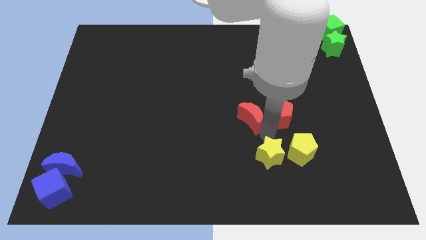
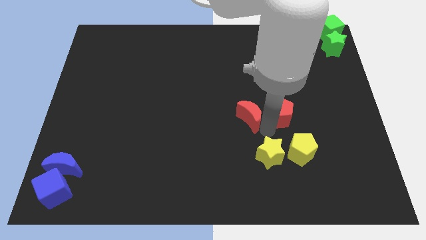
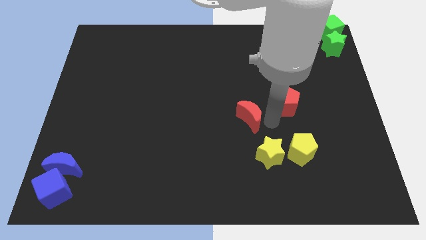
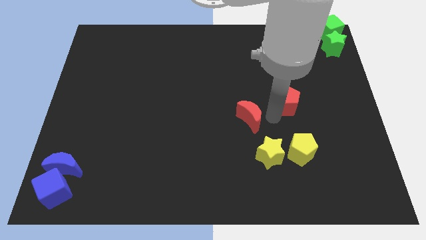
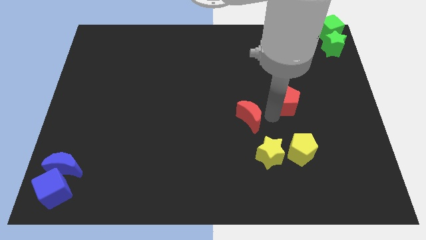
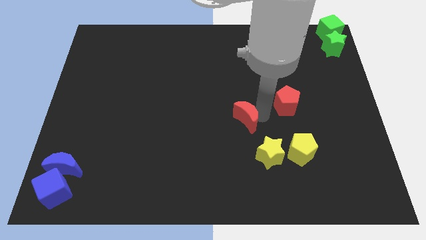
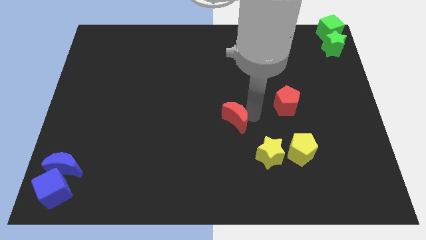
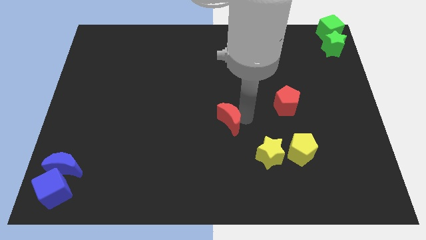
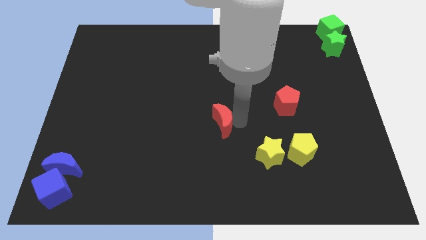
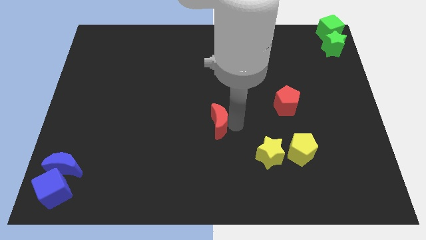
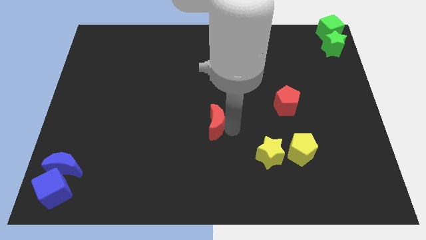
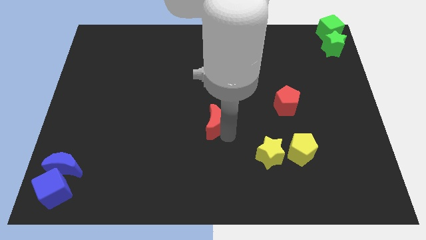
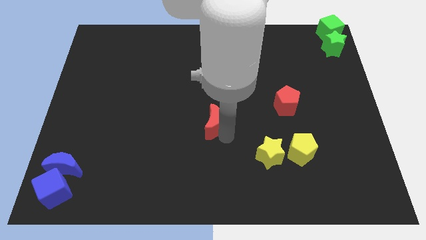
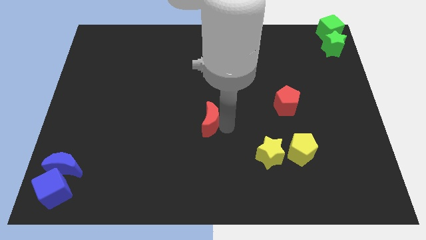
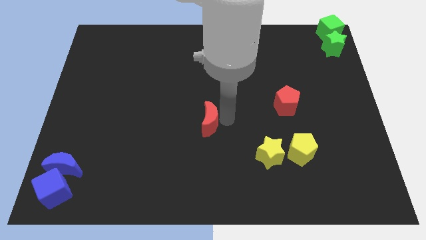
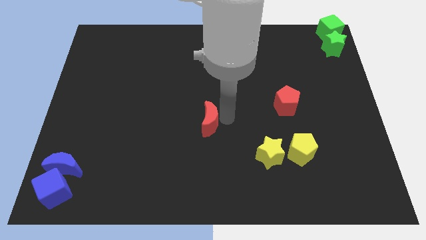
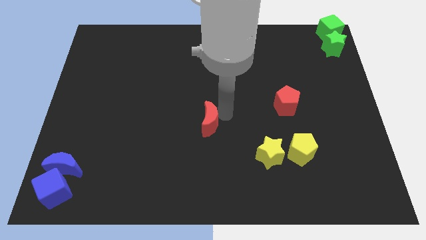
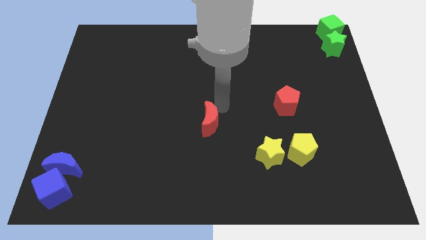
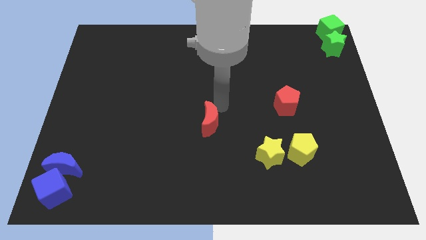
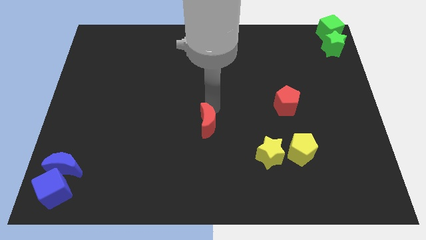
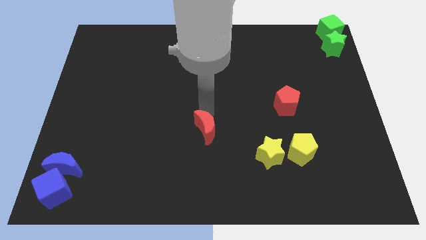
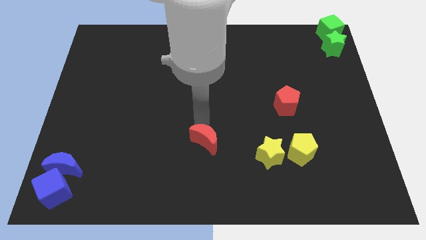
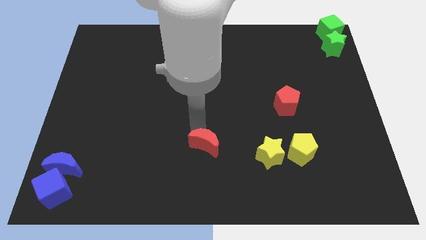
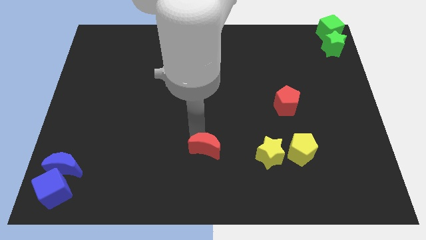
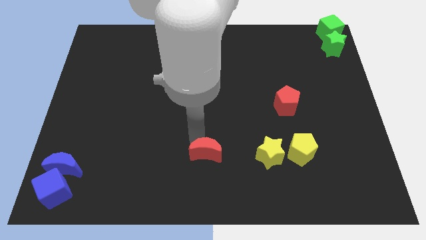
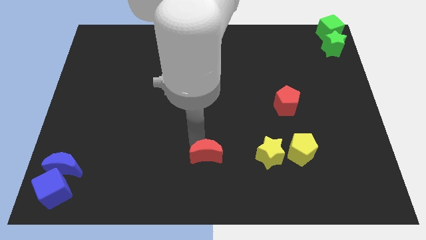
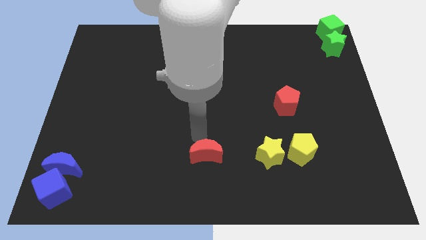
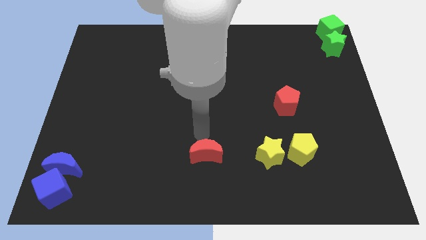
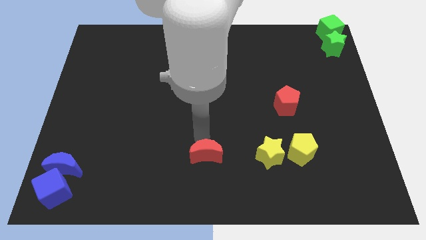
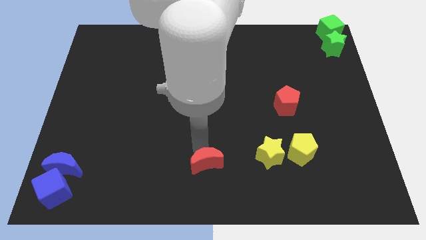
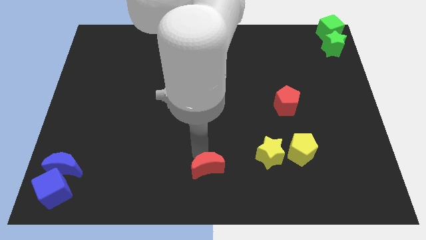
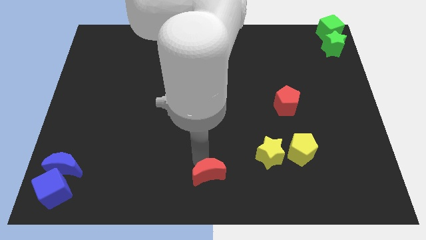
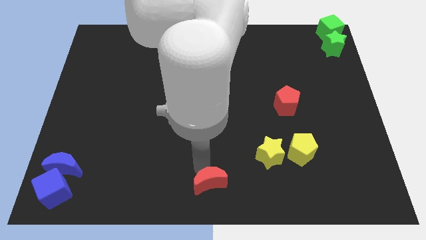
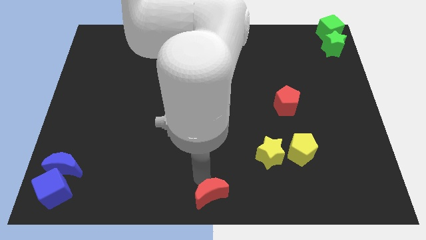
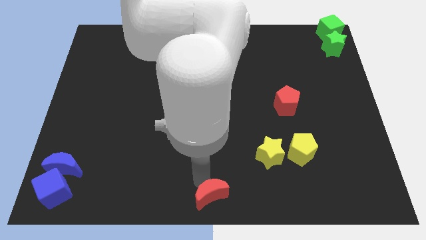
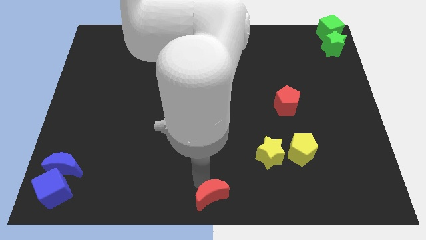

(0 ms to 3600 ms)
push the red crescent to the bottom center

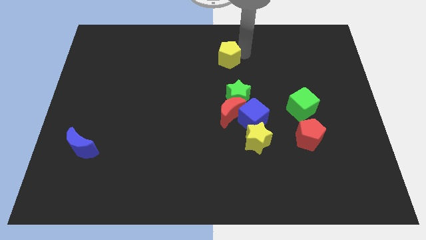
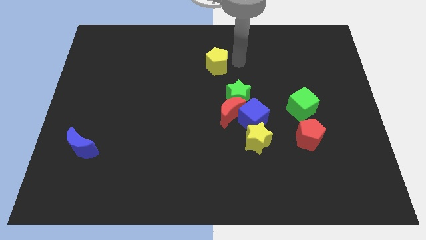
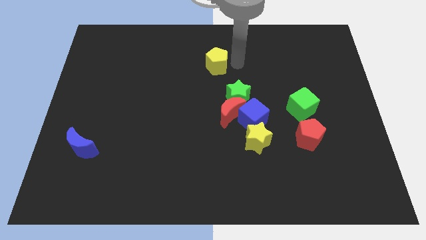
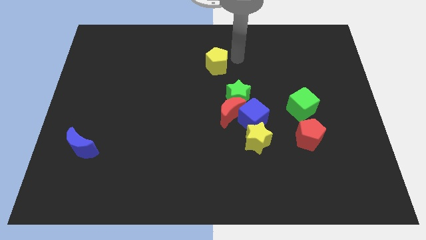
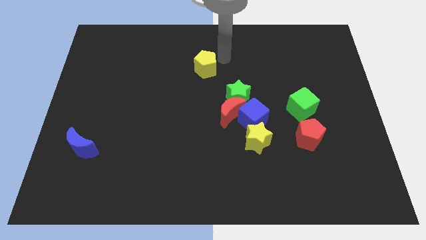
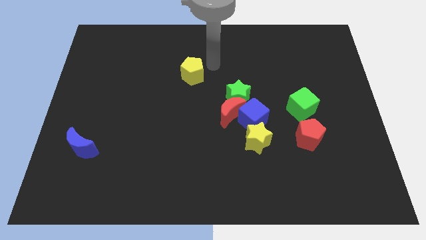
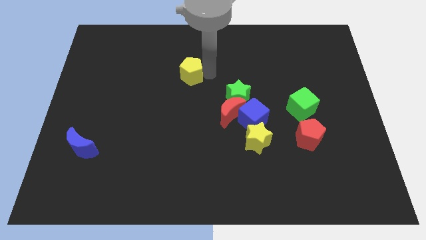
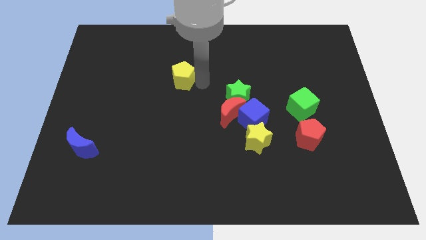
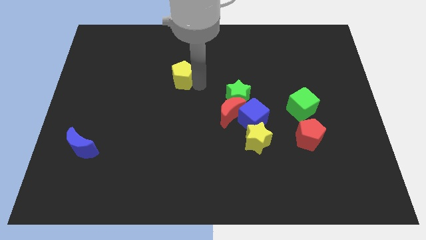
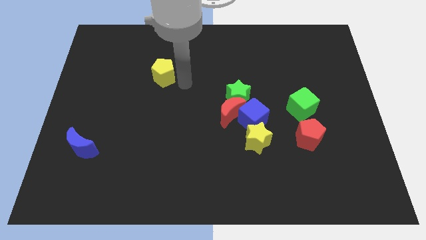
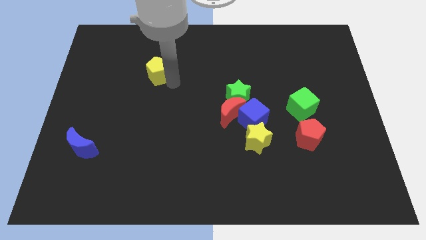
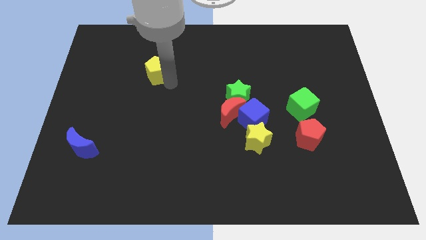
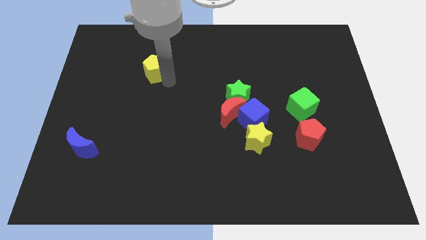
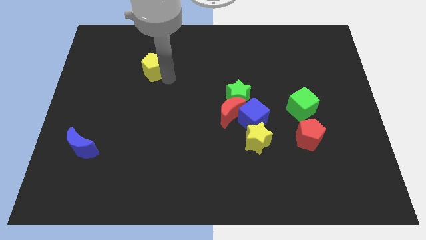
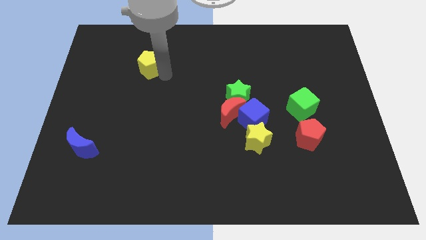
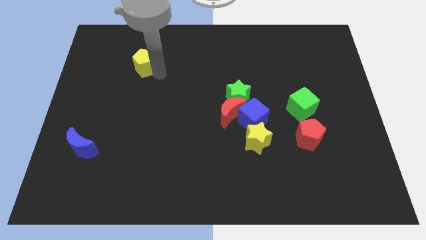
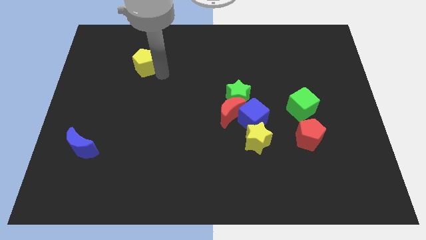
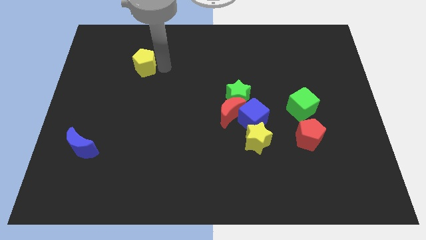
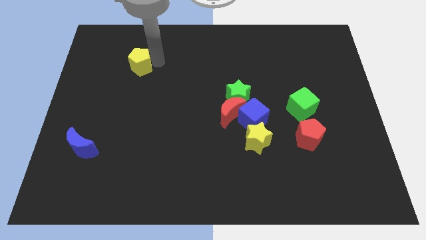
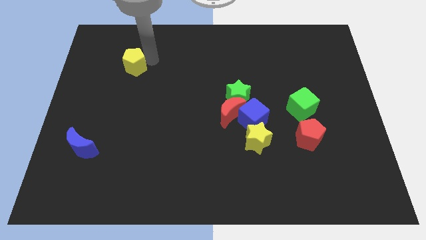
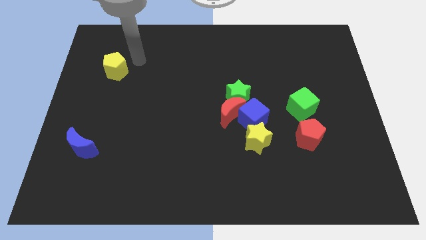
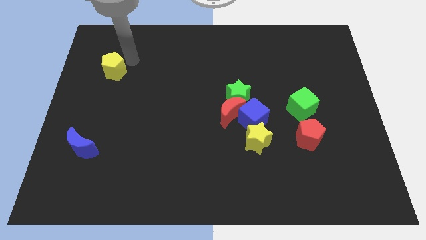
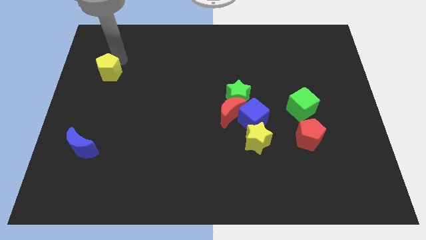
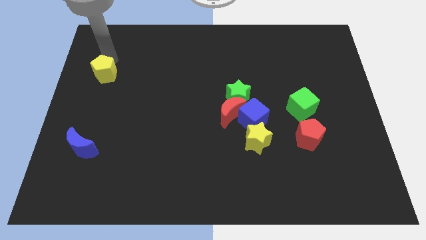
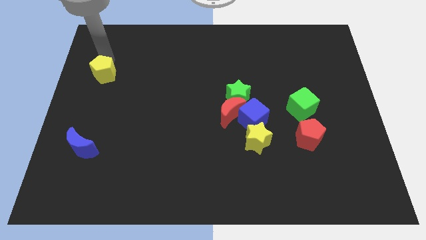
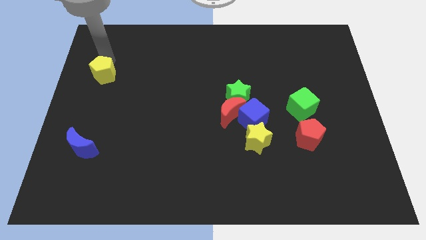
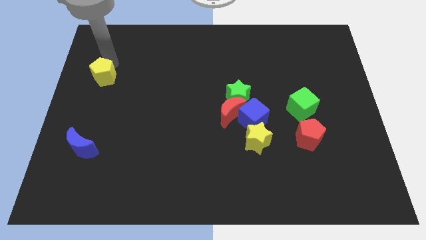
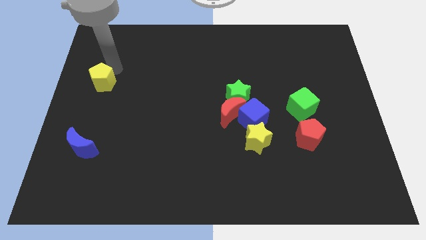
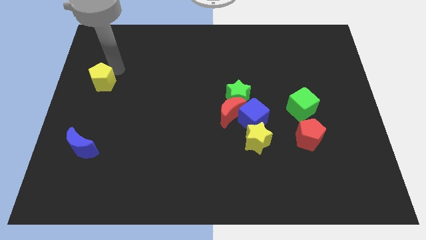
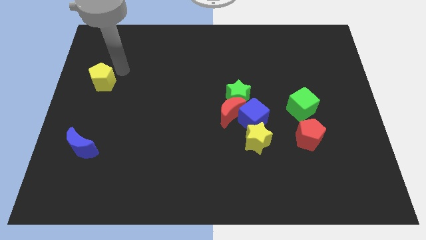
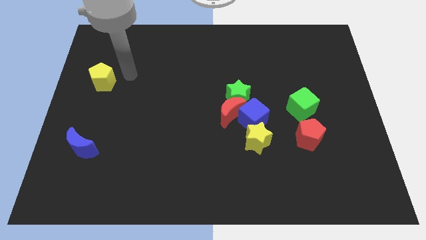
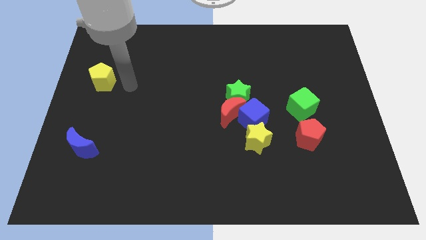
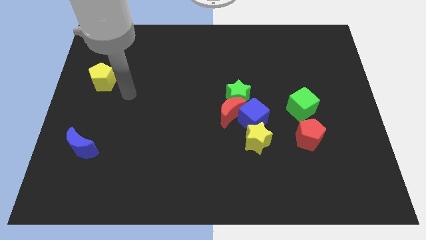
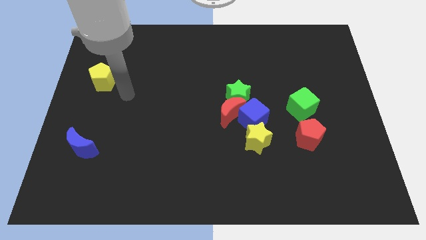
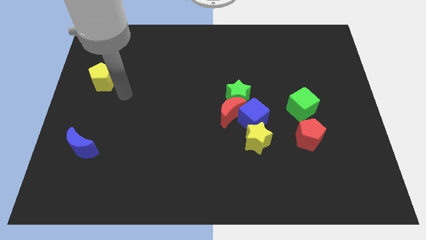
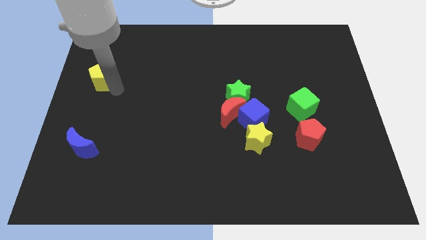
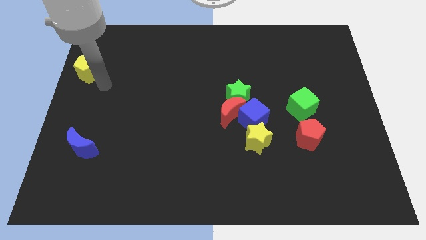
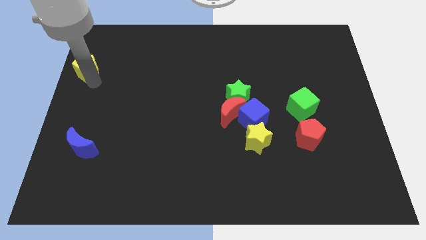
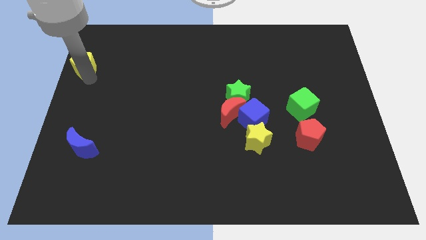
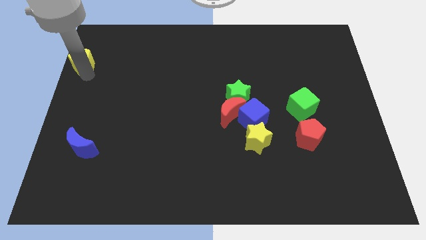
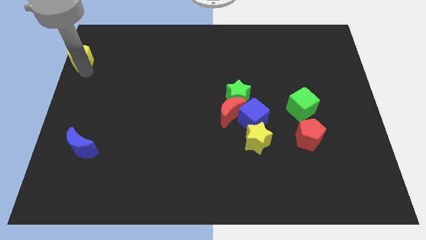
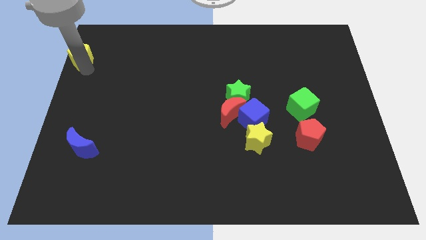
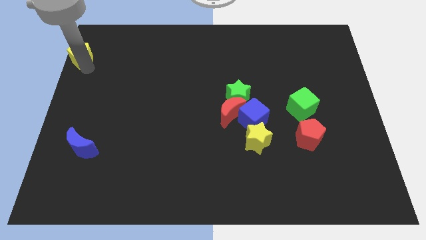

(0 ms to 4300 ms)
move the yellow pentagon towards the top left side of the board

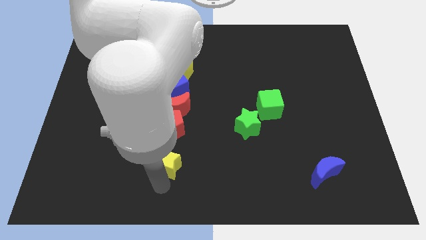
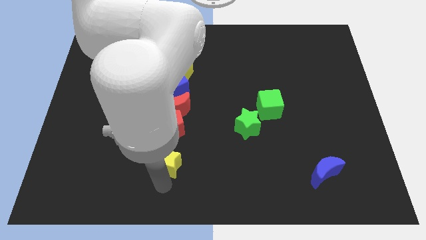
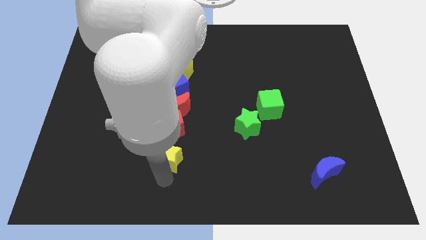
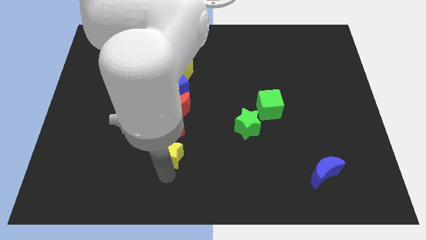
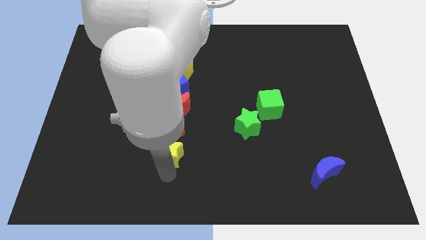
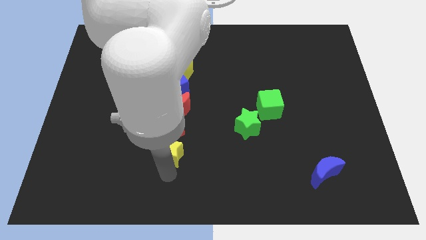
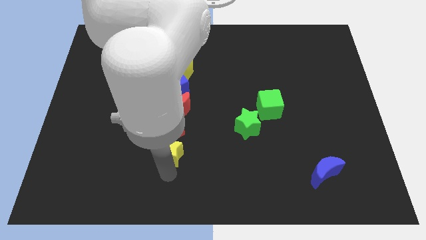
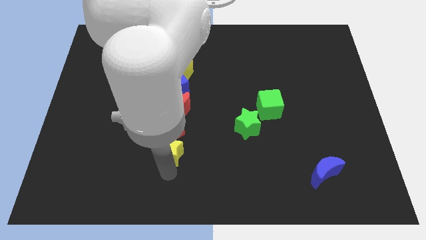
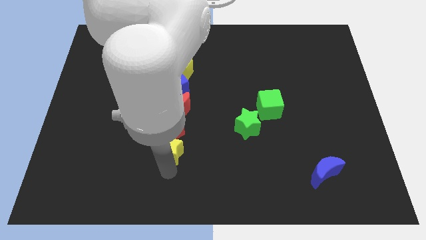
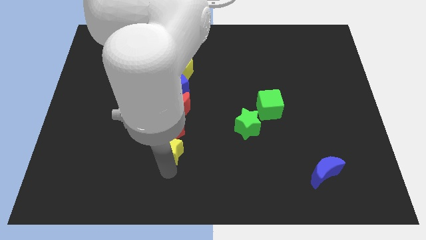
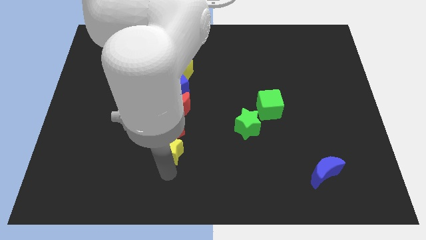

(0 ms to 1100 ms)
place the yellow star below the red pentagon

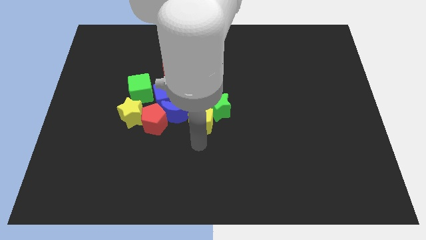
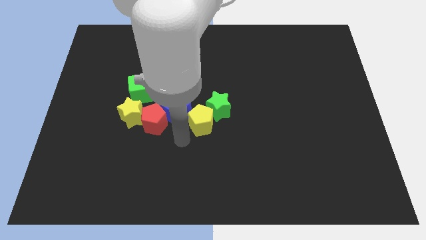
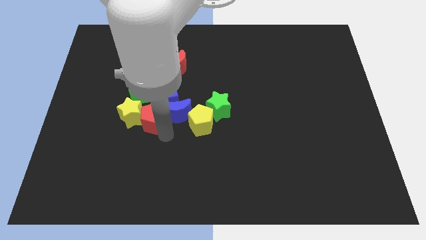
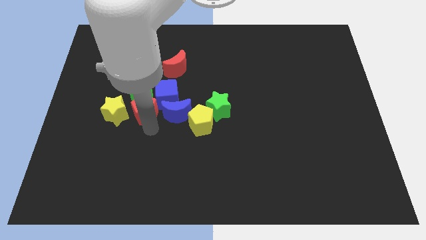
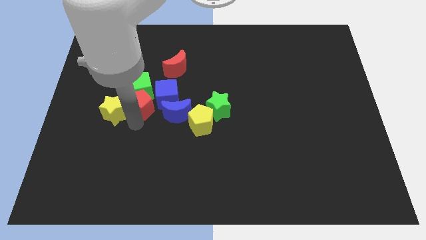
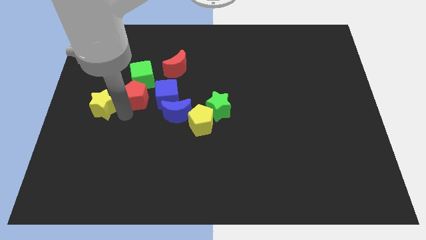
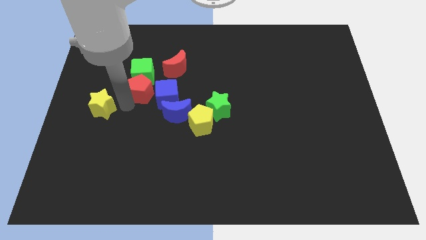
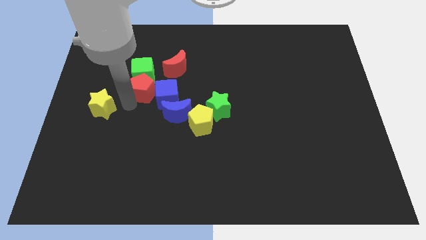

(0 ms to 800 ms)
move the red pentagon into the green cube
